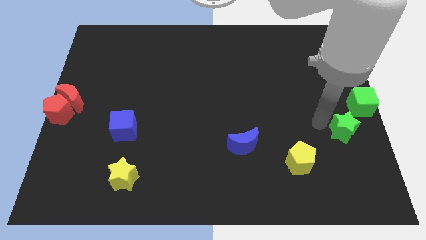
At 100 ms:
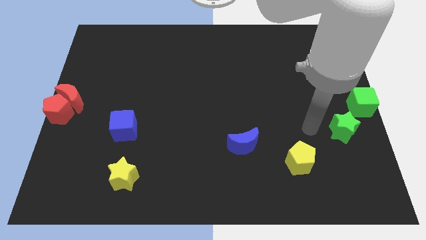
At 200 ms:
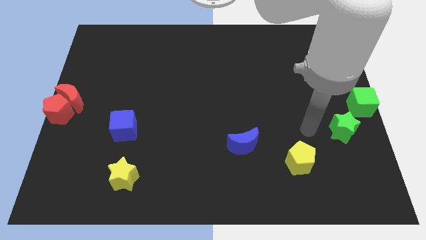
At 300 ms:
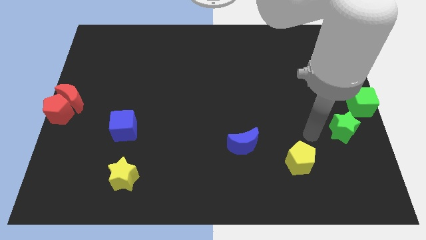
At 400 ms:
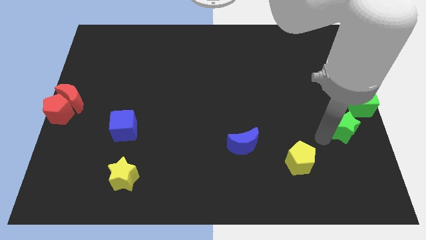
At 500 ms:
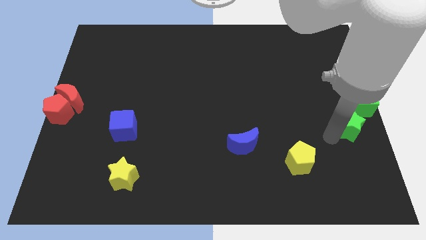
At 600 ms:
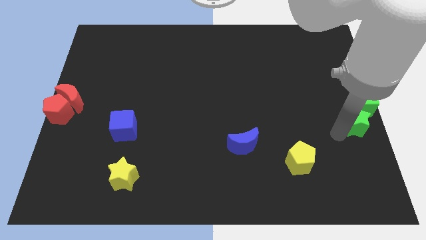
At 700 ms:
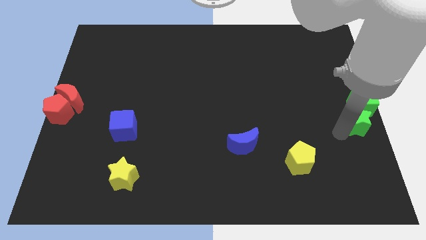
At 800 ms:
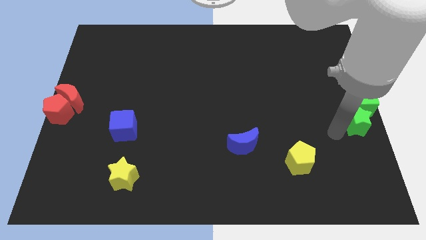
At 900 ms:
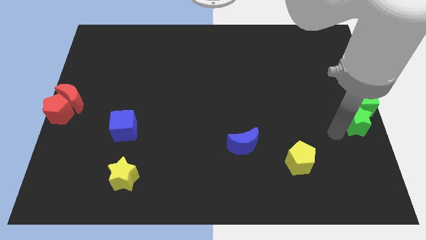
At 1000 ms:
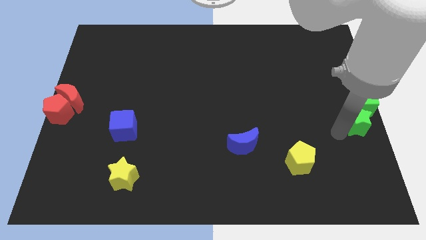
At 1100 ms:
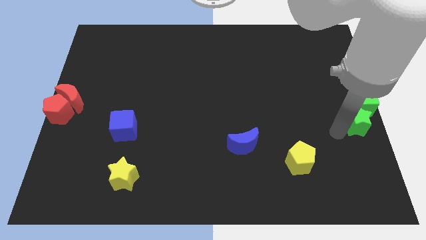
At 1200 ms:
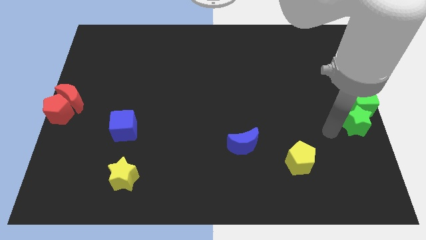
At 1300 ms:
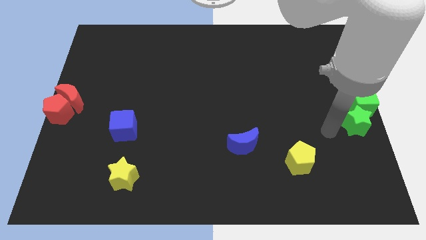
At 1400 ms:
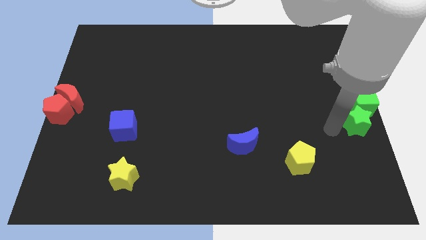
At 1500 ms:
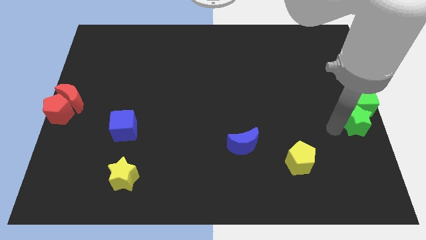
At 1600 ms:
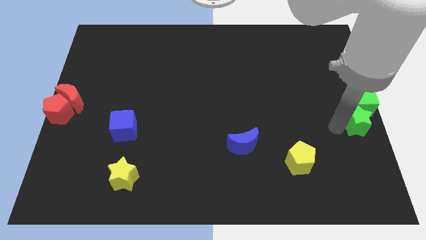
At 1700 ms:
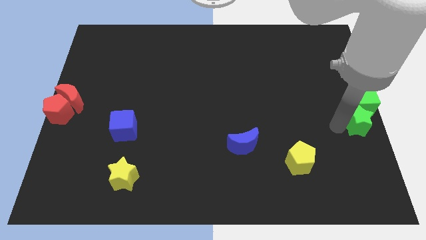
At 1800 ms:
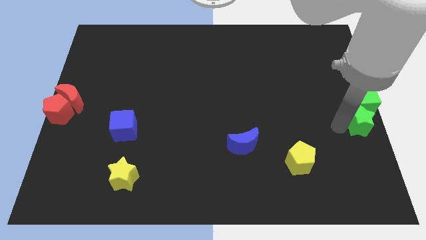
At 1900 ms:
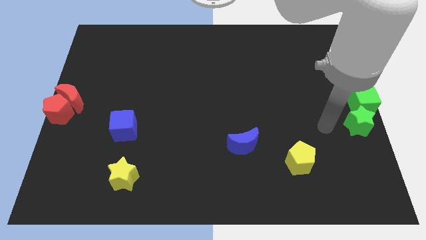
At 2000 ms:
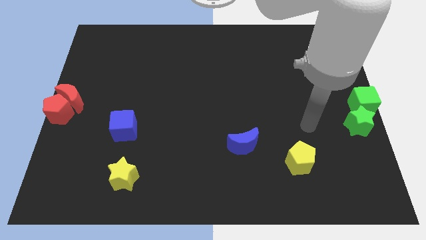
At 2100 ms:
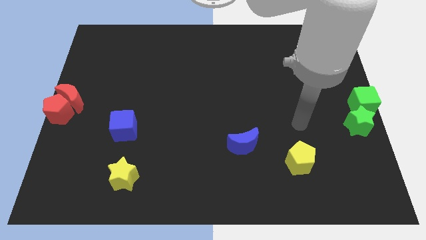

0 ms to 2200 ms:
push the green star below the green cube

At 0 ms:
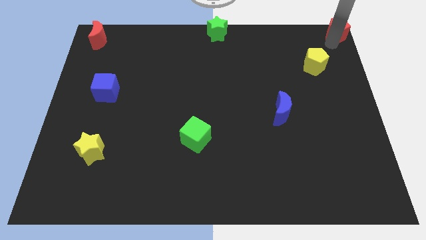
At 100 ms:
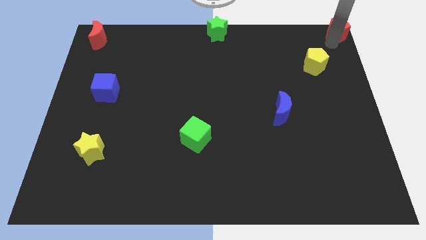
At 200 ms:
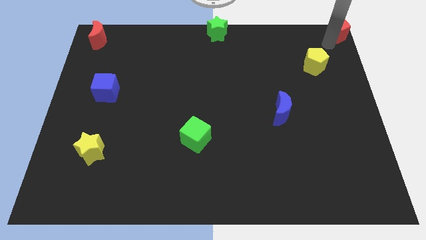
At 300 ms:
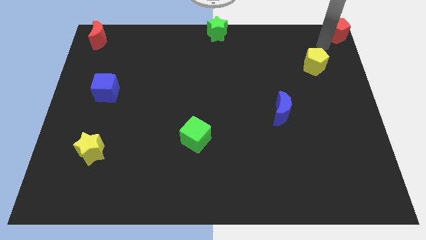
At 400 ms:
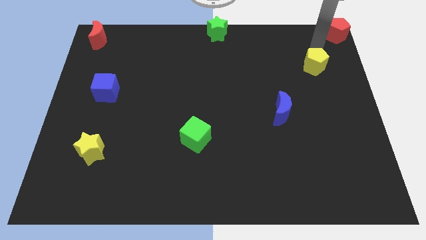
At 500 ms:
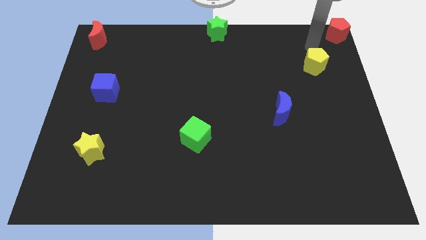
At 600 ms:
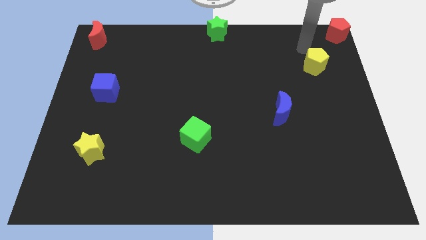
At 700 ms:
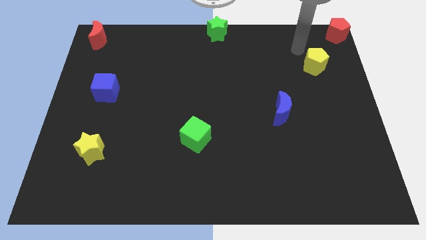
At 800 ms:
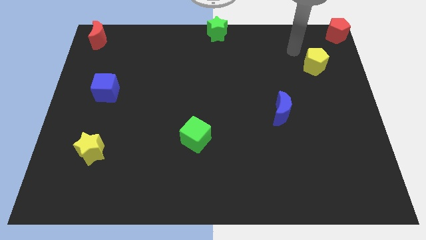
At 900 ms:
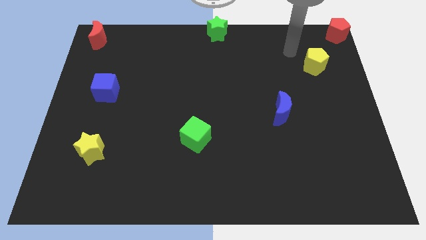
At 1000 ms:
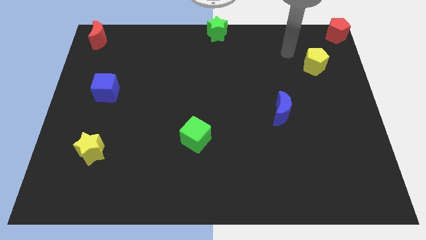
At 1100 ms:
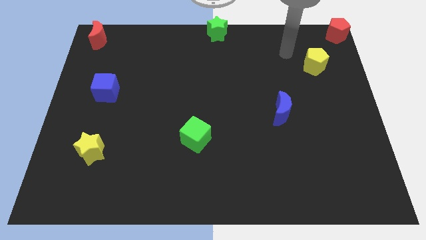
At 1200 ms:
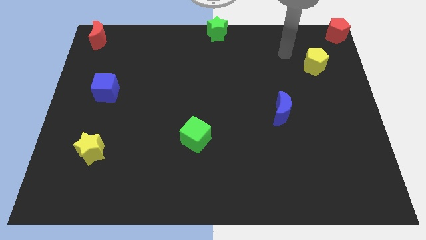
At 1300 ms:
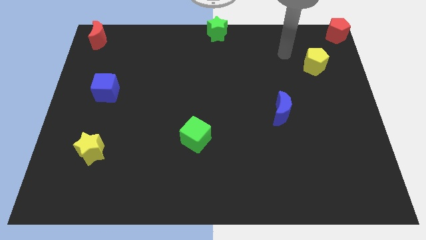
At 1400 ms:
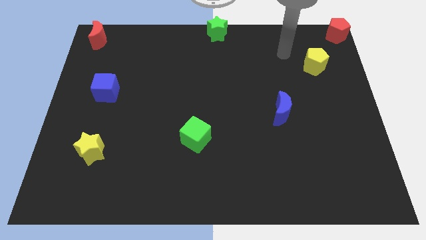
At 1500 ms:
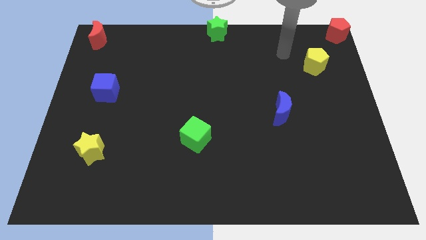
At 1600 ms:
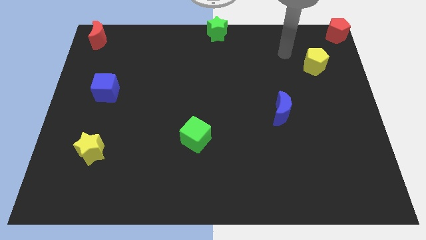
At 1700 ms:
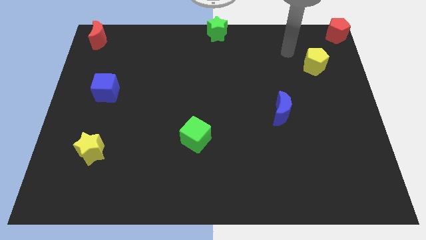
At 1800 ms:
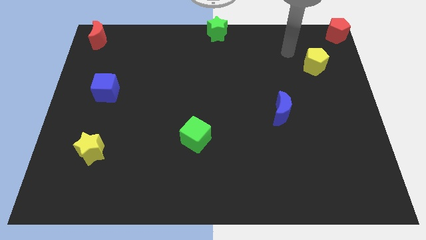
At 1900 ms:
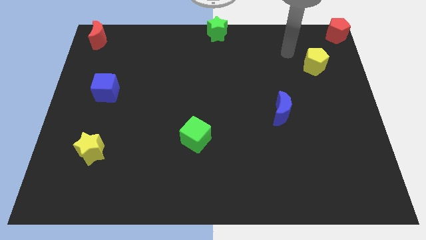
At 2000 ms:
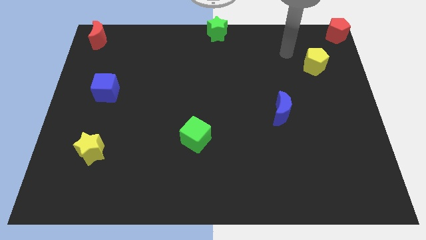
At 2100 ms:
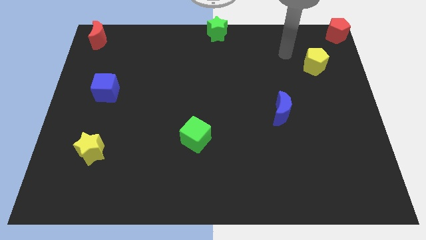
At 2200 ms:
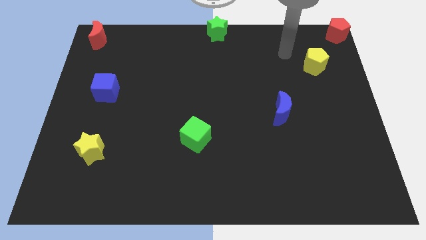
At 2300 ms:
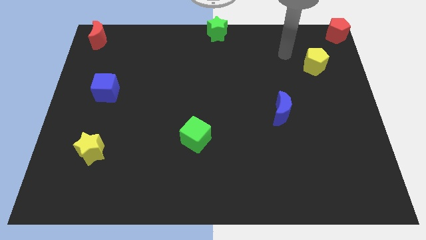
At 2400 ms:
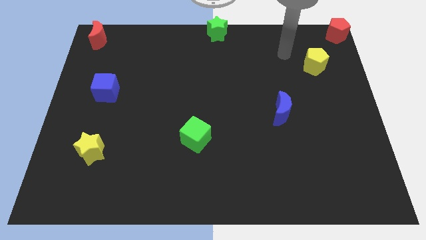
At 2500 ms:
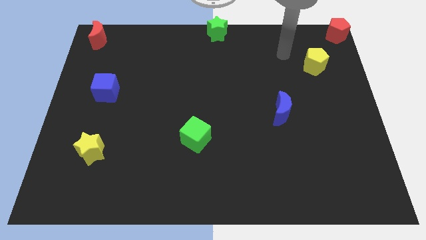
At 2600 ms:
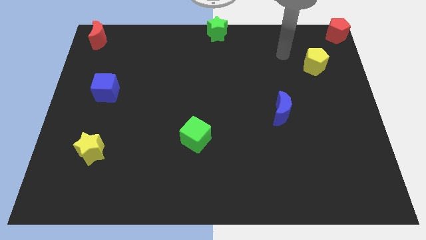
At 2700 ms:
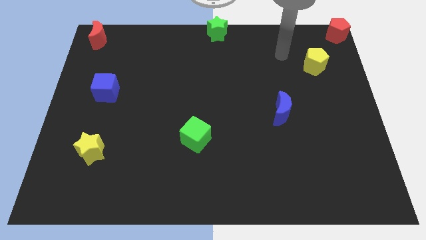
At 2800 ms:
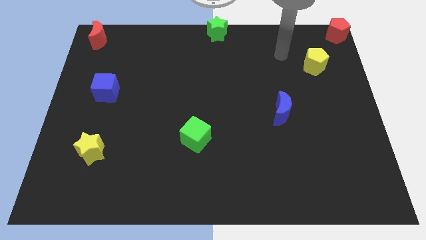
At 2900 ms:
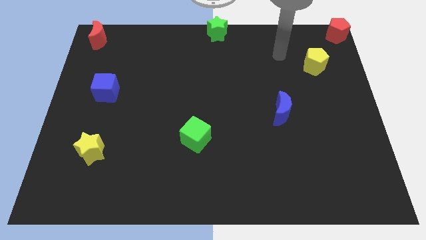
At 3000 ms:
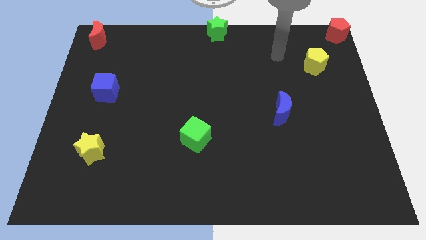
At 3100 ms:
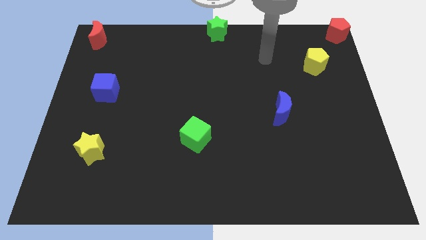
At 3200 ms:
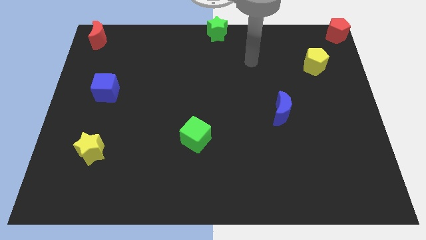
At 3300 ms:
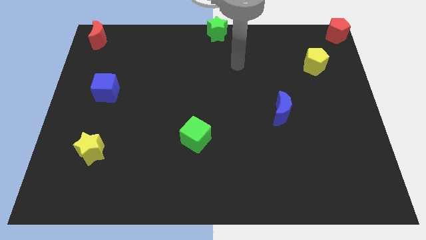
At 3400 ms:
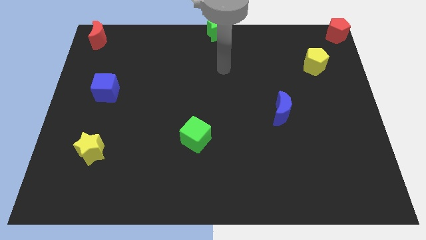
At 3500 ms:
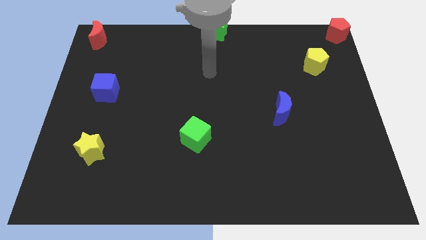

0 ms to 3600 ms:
move the arm into the blue cube

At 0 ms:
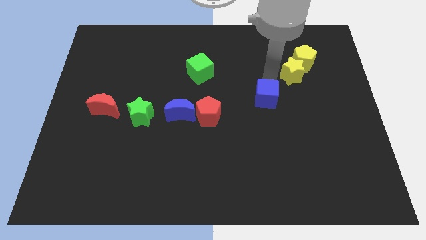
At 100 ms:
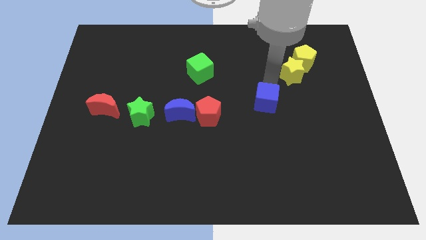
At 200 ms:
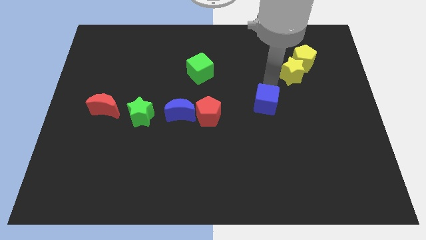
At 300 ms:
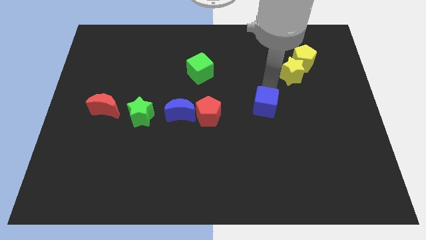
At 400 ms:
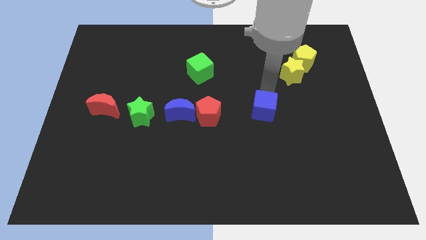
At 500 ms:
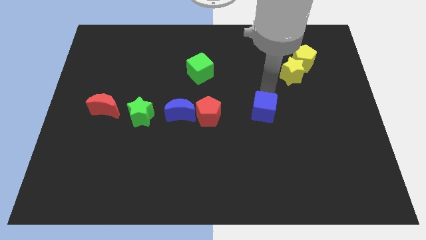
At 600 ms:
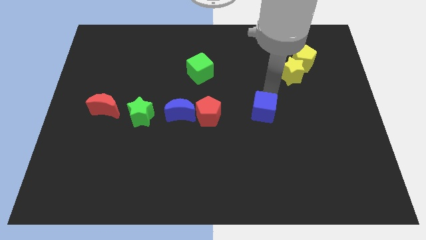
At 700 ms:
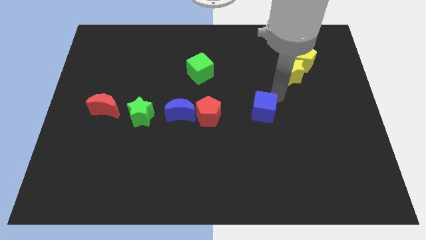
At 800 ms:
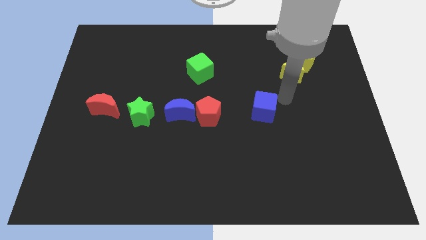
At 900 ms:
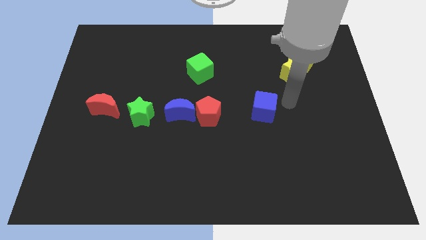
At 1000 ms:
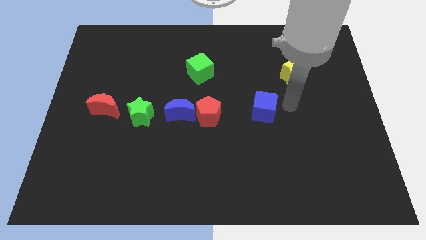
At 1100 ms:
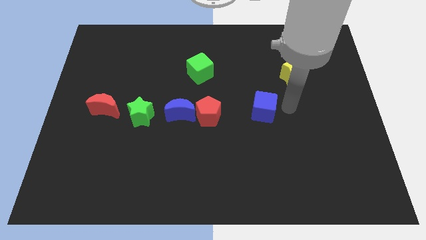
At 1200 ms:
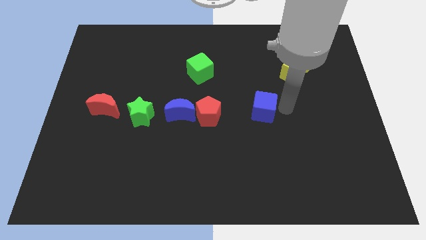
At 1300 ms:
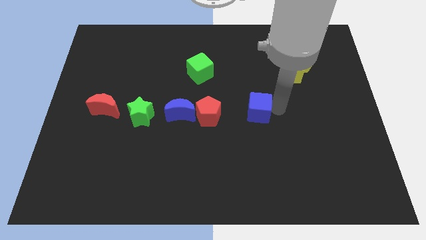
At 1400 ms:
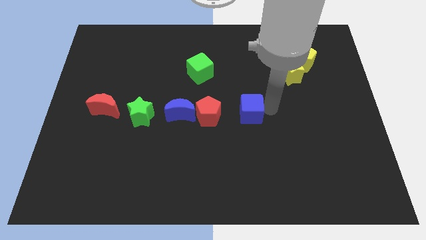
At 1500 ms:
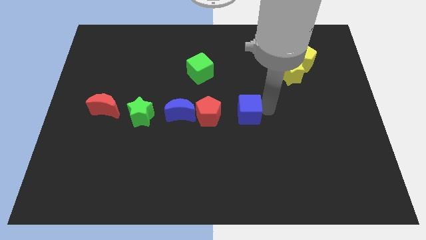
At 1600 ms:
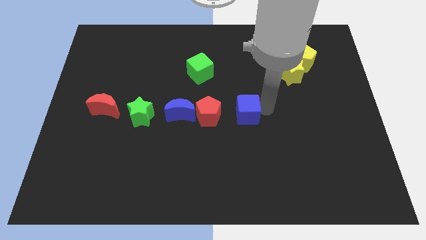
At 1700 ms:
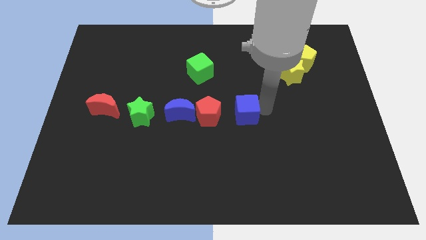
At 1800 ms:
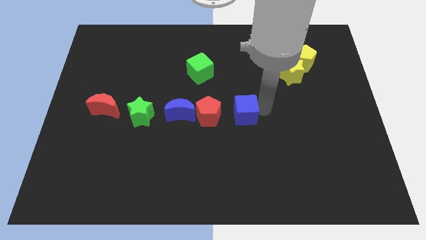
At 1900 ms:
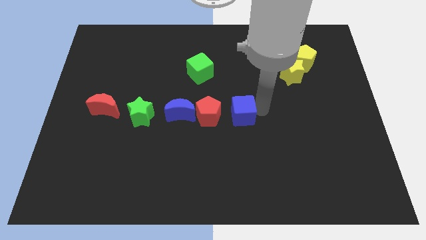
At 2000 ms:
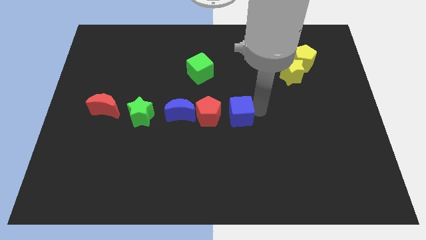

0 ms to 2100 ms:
move blue cube into red pentagon

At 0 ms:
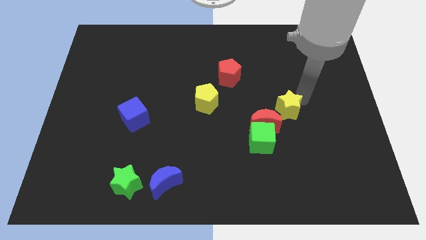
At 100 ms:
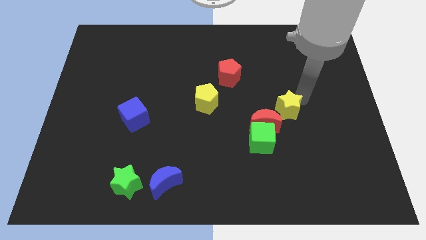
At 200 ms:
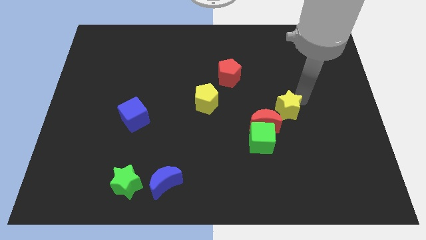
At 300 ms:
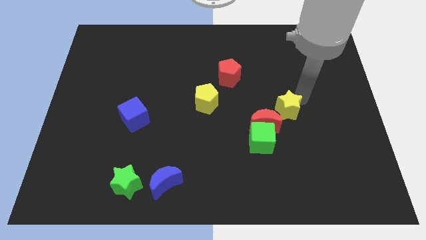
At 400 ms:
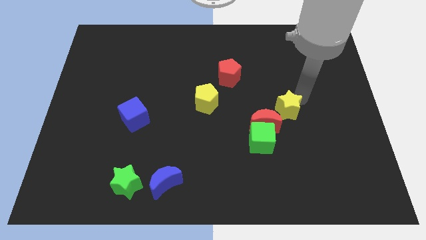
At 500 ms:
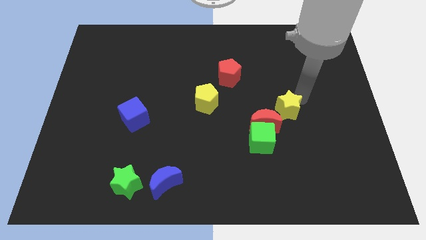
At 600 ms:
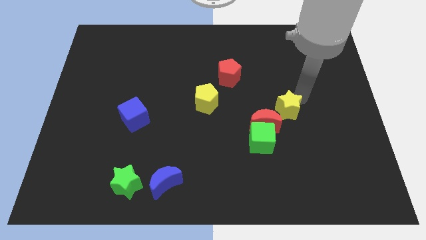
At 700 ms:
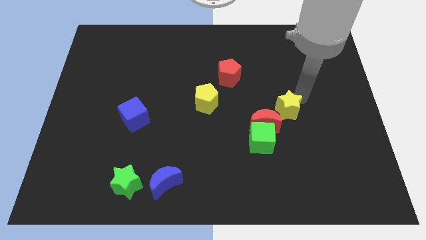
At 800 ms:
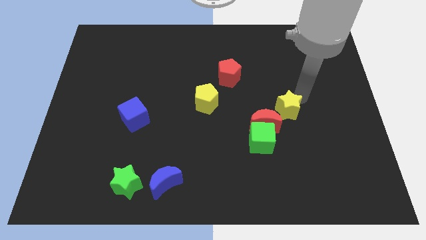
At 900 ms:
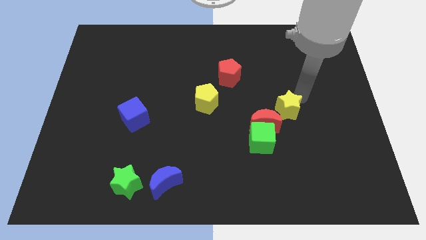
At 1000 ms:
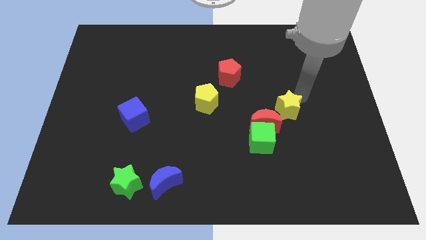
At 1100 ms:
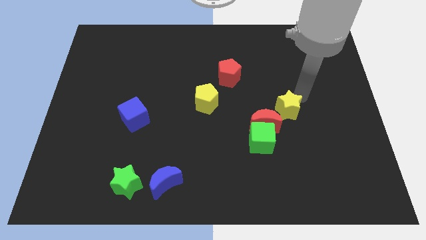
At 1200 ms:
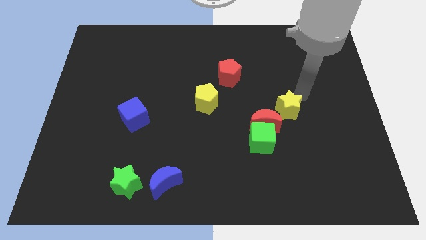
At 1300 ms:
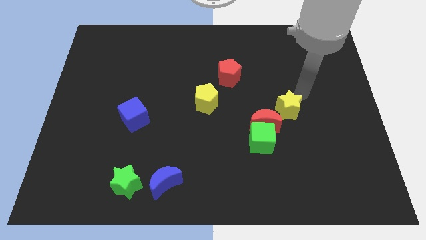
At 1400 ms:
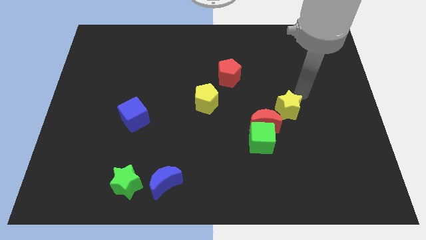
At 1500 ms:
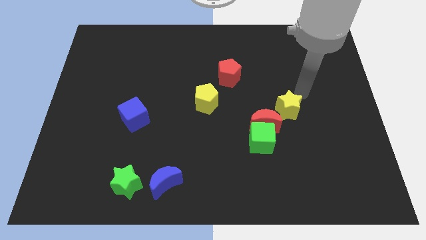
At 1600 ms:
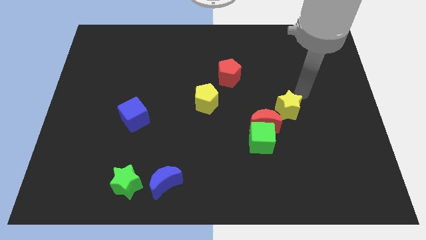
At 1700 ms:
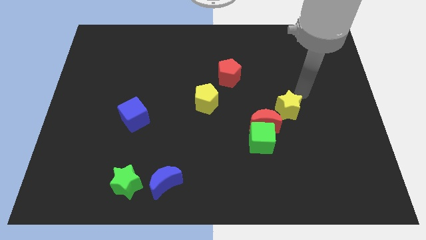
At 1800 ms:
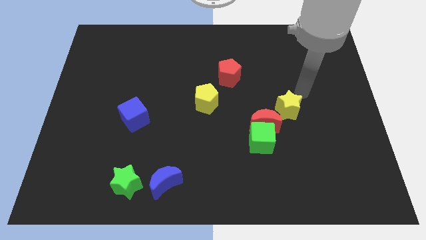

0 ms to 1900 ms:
move your arm towards the yellow star
